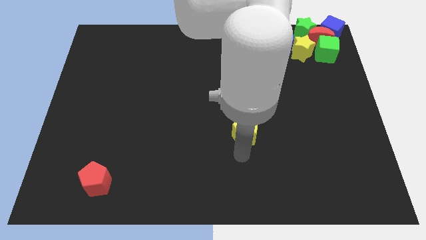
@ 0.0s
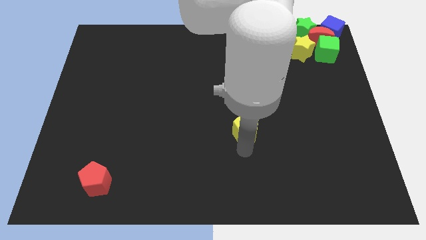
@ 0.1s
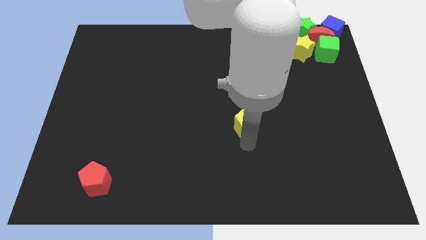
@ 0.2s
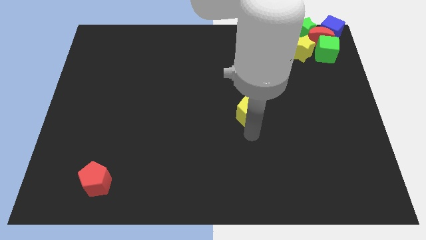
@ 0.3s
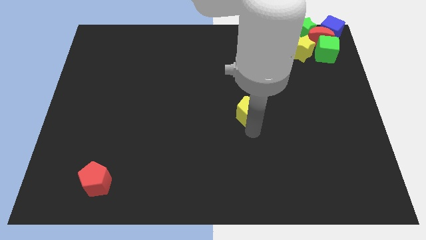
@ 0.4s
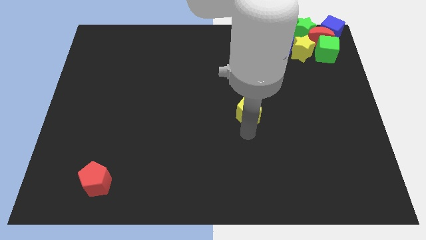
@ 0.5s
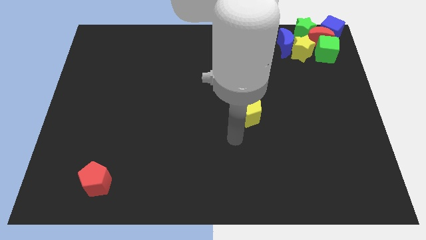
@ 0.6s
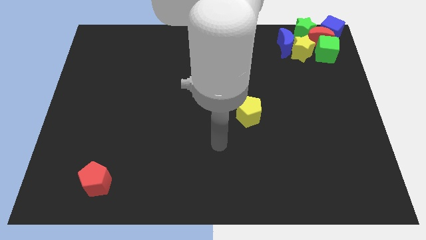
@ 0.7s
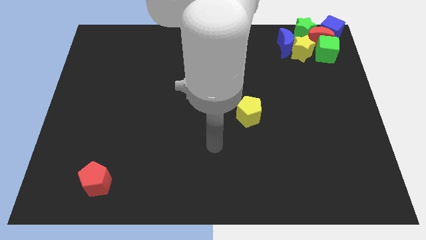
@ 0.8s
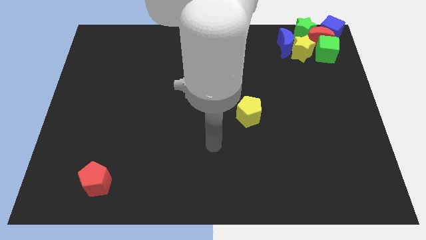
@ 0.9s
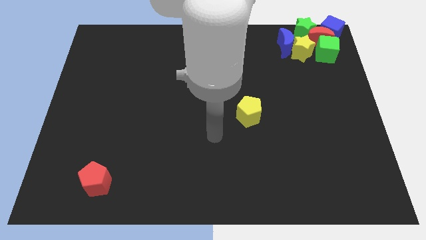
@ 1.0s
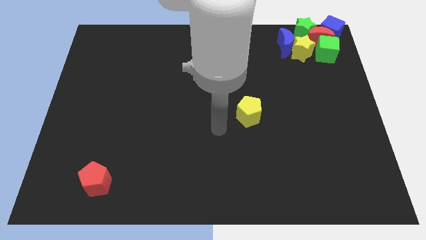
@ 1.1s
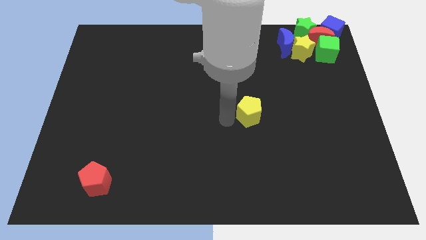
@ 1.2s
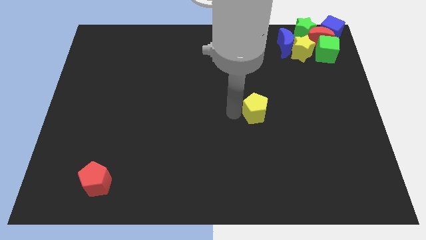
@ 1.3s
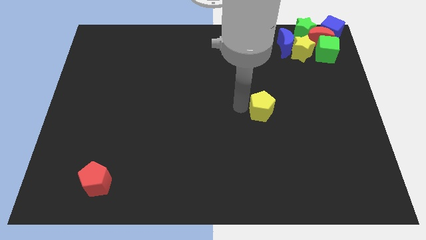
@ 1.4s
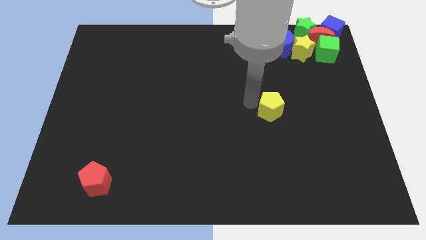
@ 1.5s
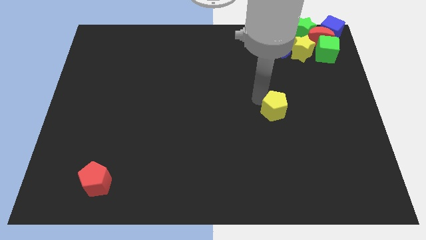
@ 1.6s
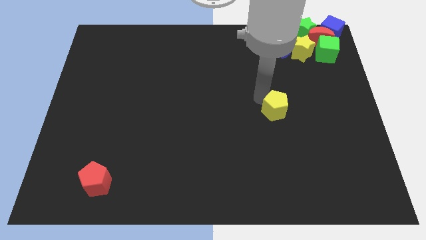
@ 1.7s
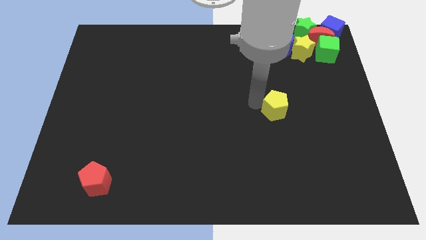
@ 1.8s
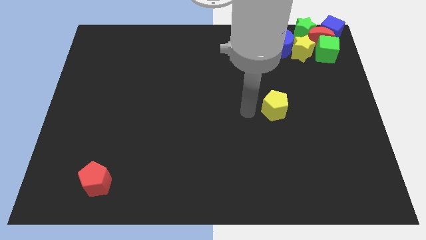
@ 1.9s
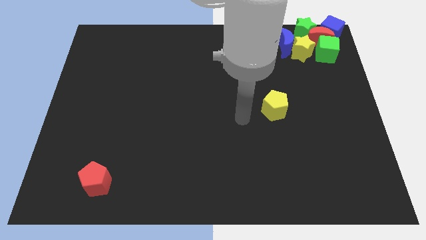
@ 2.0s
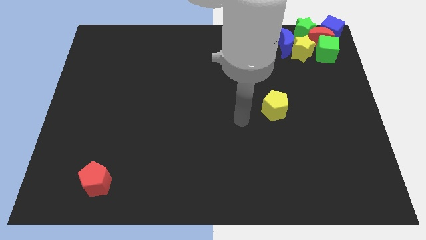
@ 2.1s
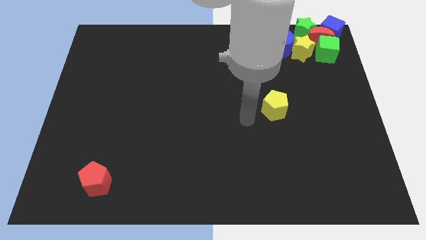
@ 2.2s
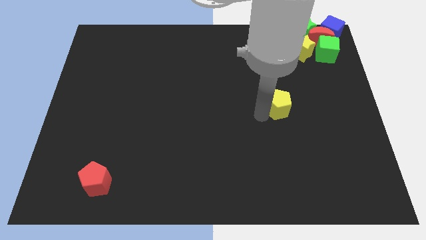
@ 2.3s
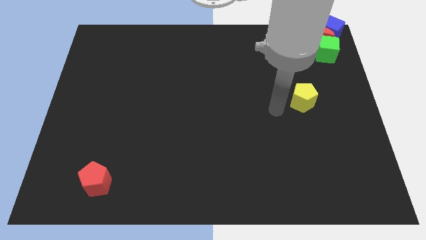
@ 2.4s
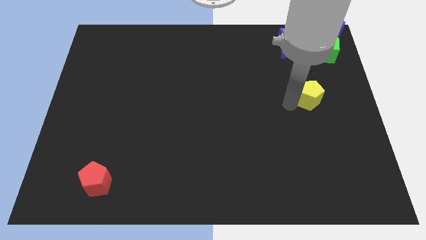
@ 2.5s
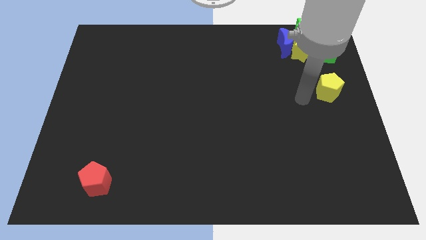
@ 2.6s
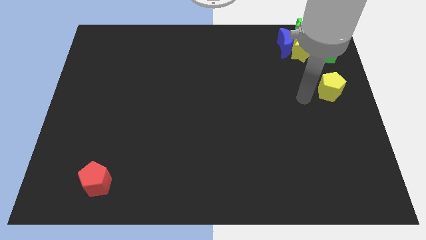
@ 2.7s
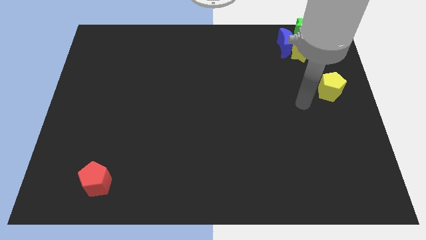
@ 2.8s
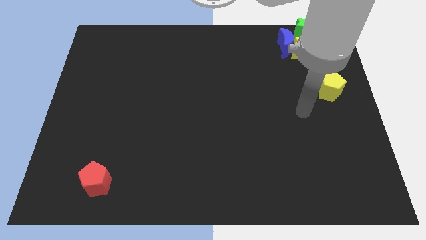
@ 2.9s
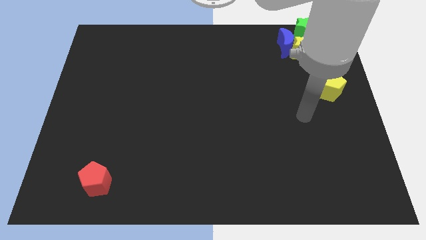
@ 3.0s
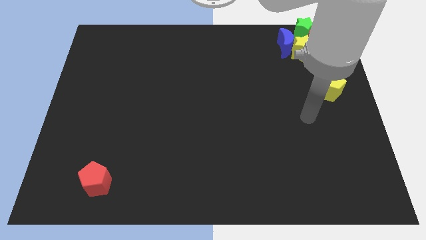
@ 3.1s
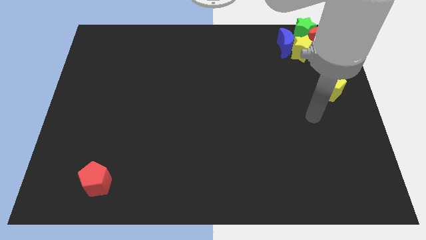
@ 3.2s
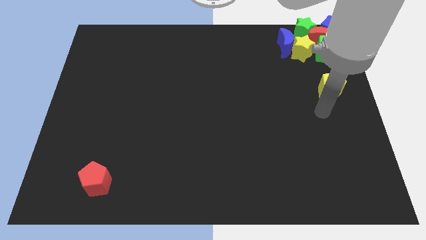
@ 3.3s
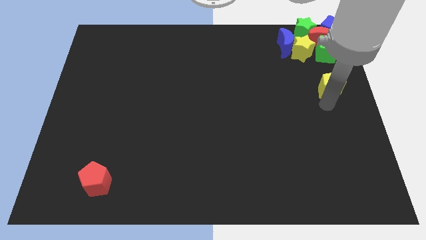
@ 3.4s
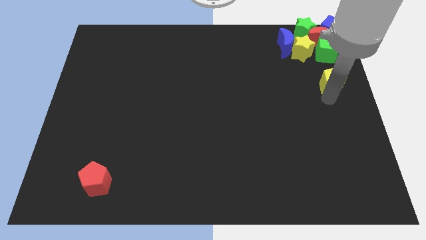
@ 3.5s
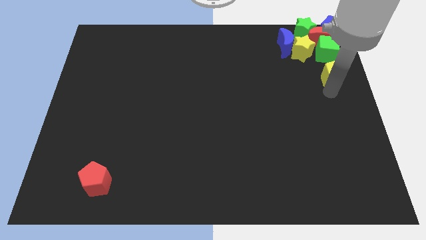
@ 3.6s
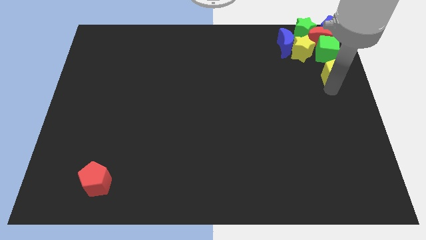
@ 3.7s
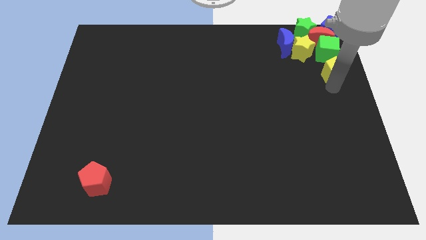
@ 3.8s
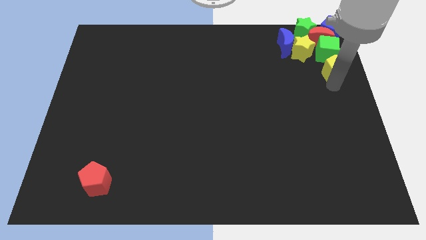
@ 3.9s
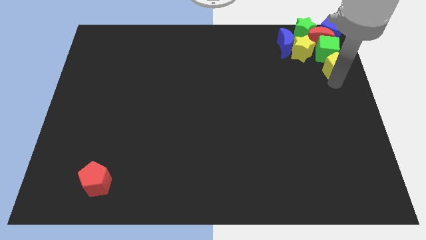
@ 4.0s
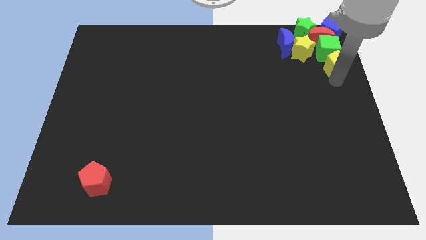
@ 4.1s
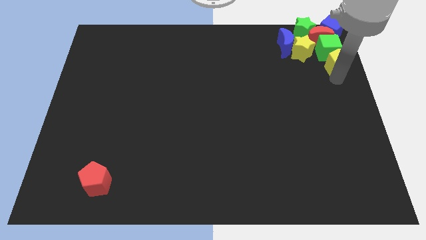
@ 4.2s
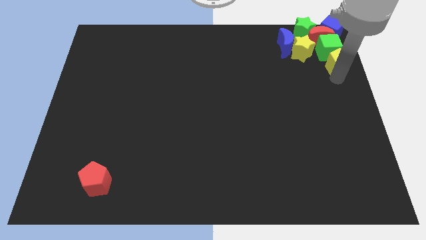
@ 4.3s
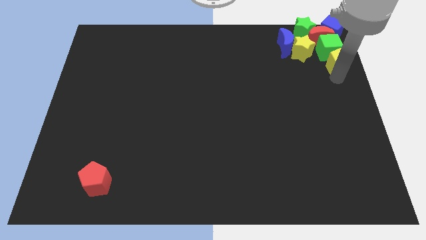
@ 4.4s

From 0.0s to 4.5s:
push the yellow pentagon and place it below the green cube

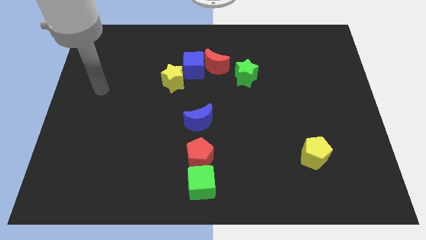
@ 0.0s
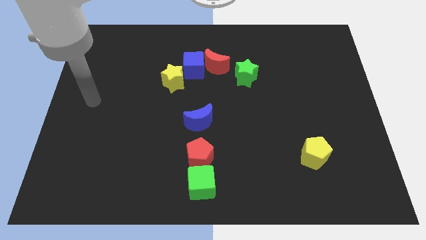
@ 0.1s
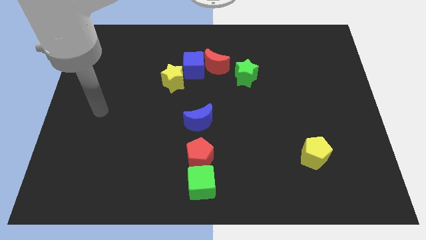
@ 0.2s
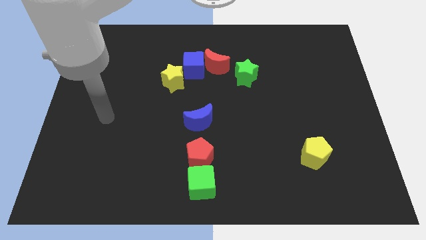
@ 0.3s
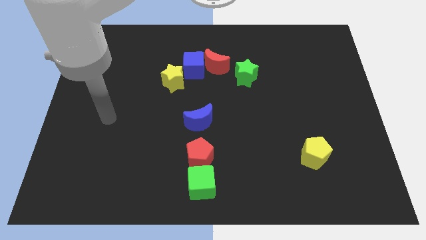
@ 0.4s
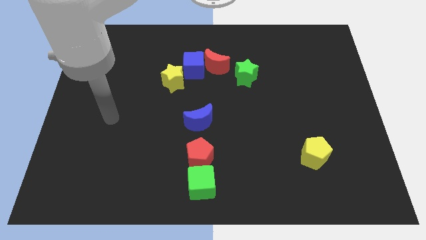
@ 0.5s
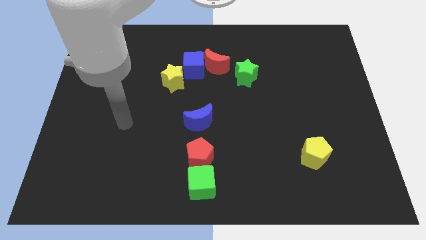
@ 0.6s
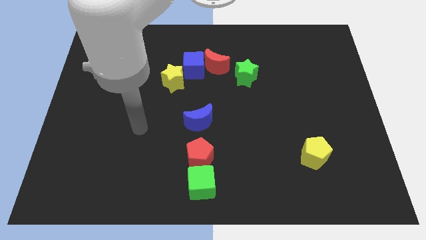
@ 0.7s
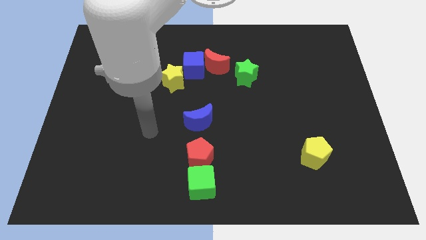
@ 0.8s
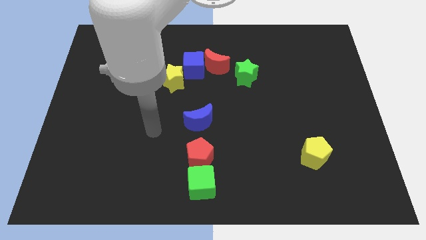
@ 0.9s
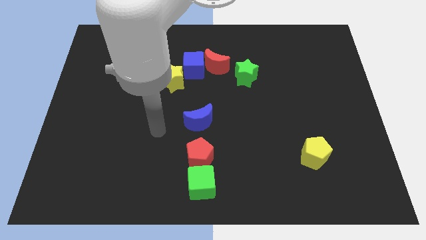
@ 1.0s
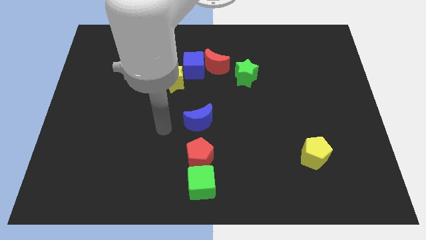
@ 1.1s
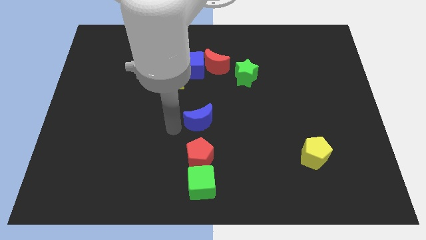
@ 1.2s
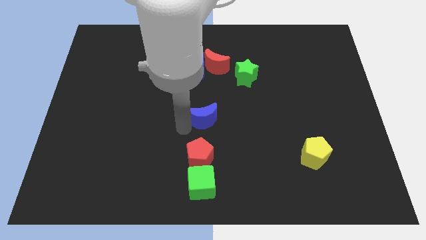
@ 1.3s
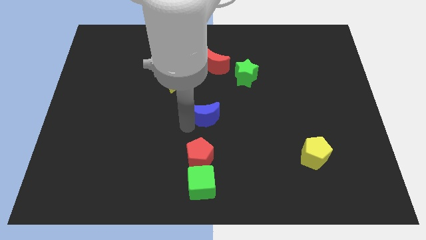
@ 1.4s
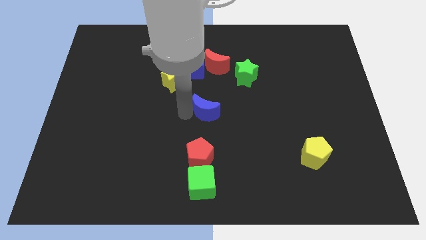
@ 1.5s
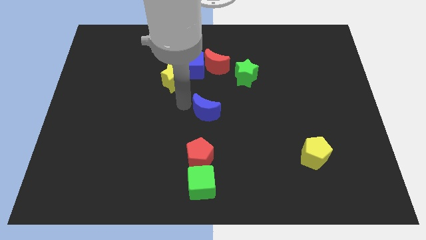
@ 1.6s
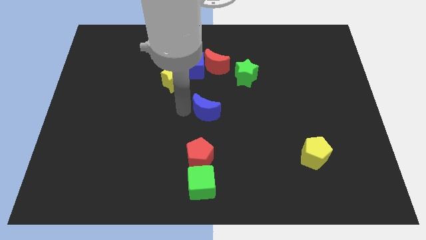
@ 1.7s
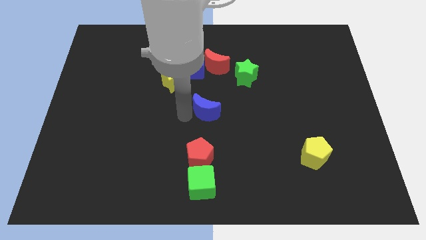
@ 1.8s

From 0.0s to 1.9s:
move the arm into the blue crescent

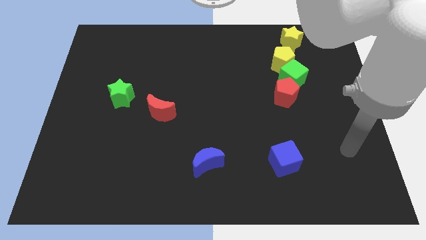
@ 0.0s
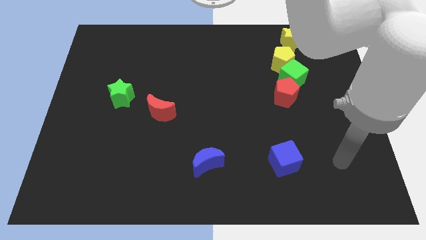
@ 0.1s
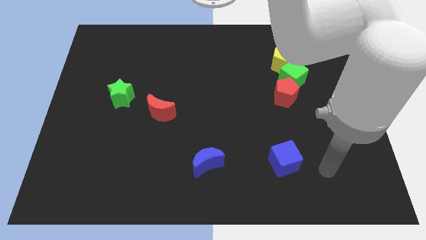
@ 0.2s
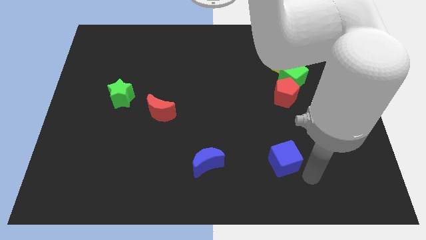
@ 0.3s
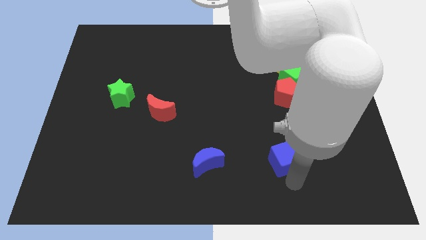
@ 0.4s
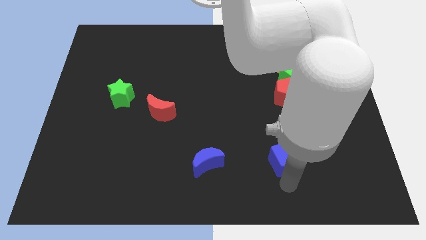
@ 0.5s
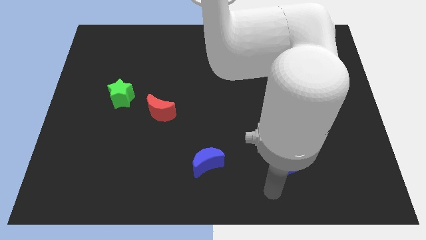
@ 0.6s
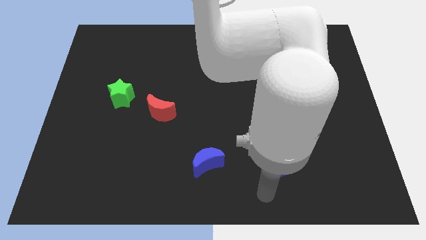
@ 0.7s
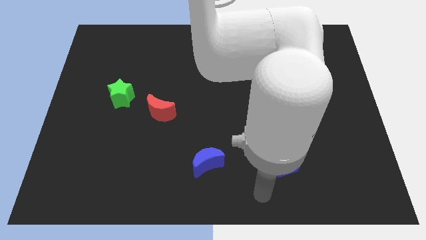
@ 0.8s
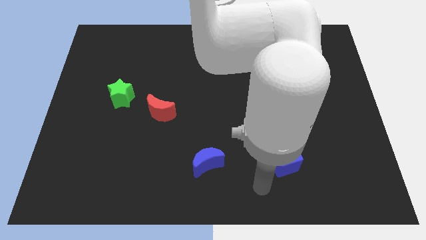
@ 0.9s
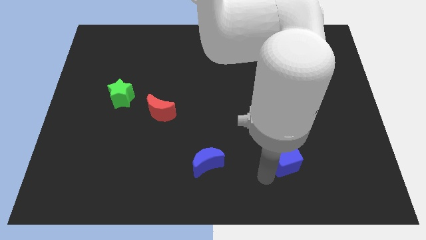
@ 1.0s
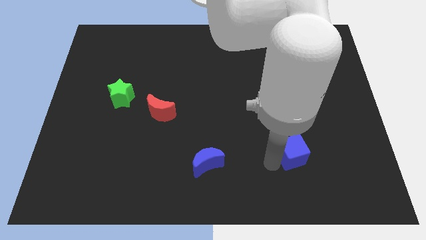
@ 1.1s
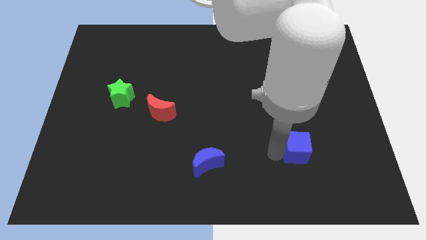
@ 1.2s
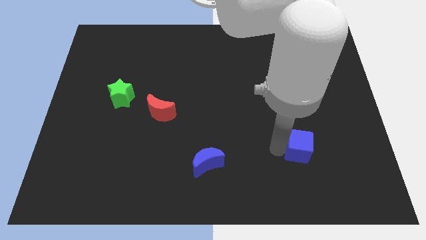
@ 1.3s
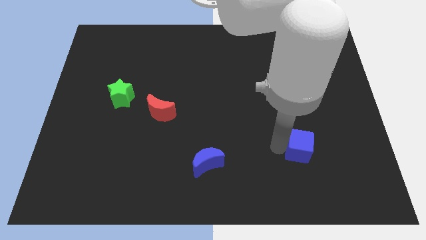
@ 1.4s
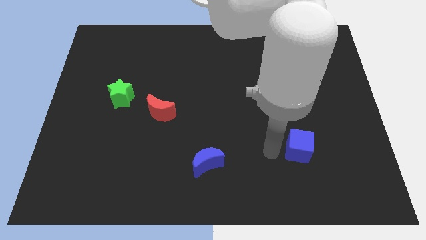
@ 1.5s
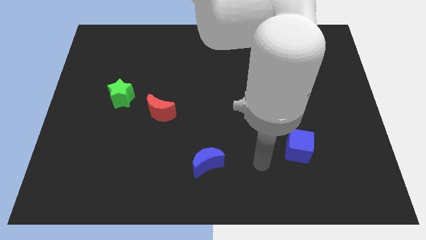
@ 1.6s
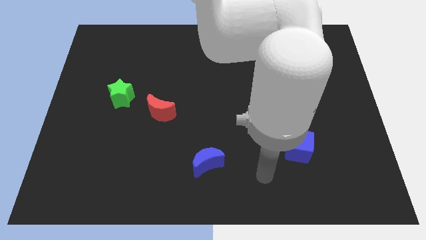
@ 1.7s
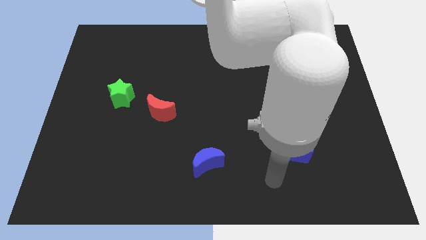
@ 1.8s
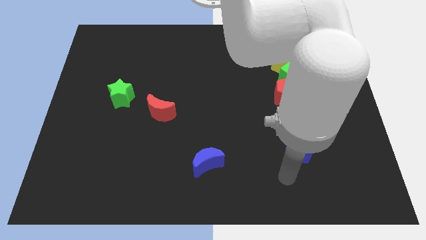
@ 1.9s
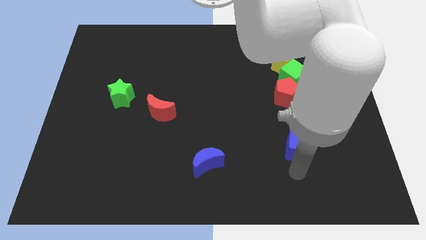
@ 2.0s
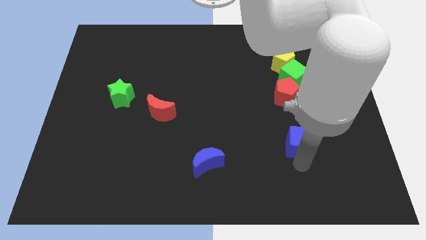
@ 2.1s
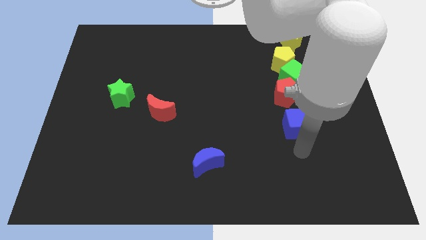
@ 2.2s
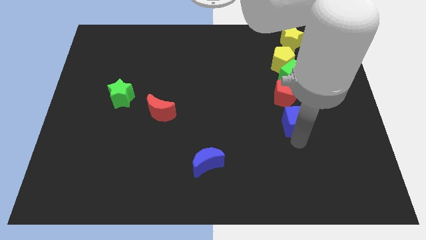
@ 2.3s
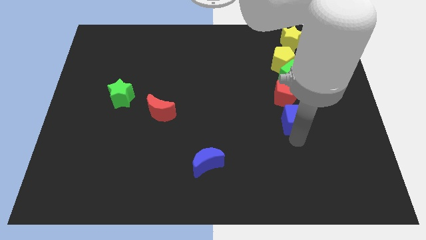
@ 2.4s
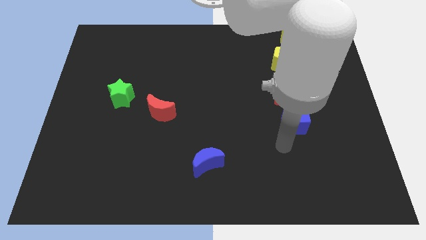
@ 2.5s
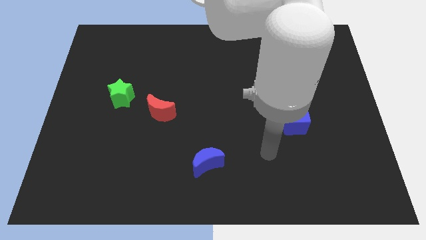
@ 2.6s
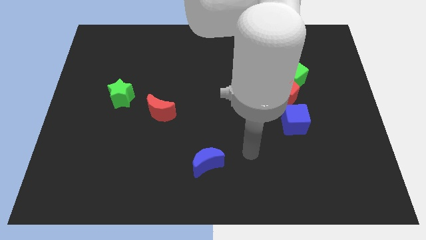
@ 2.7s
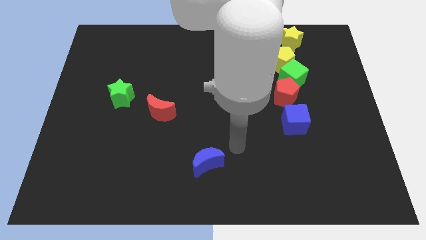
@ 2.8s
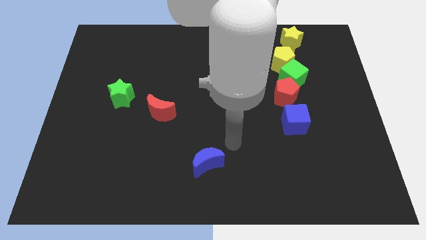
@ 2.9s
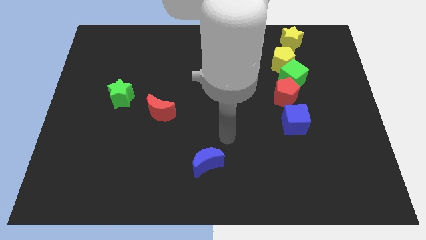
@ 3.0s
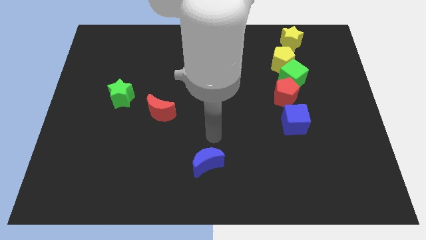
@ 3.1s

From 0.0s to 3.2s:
move the blue cube to the bottom of the red pentagon
